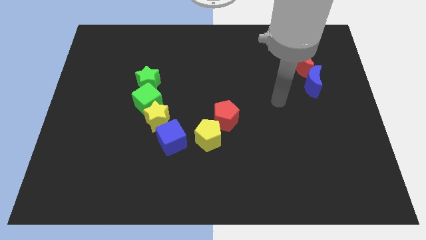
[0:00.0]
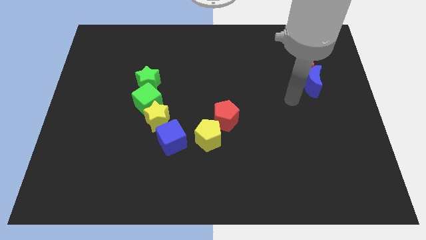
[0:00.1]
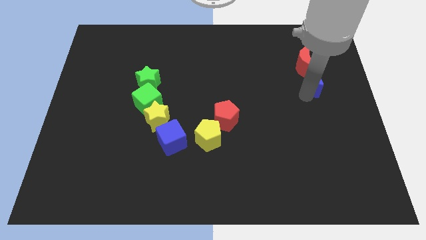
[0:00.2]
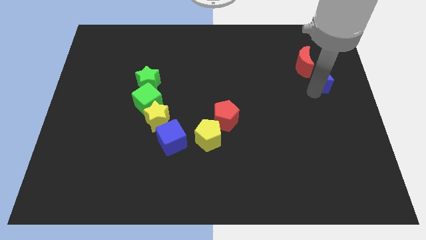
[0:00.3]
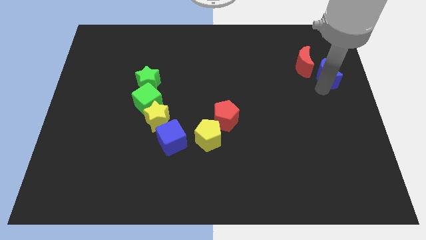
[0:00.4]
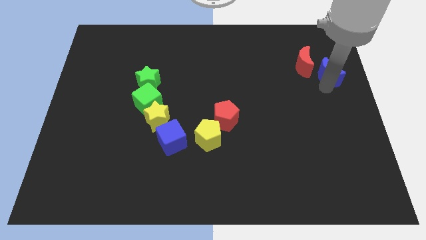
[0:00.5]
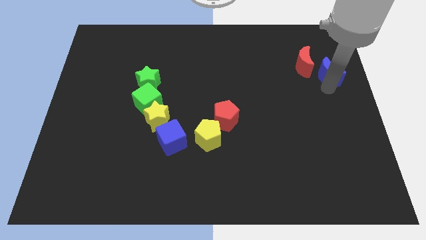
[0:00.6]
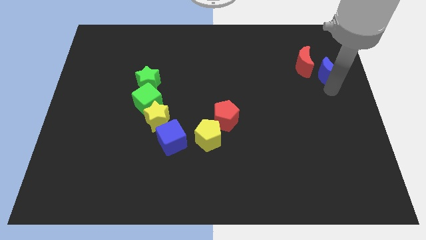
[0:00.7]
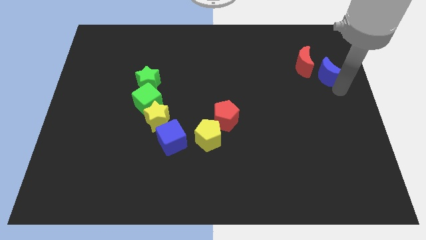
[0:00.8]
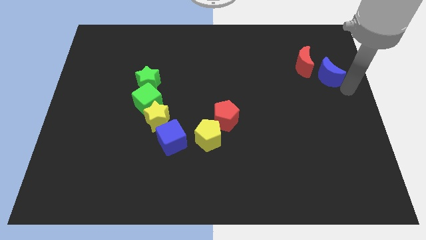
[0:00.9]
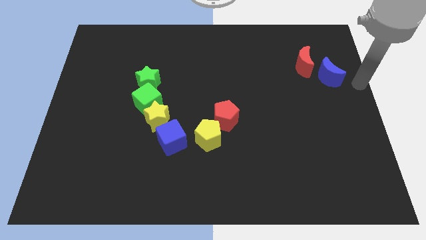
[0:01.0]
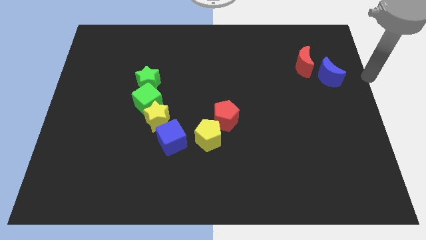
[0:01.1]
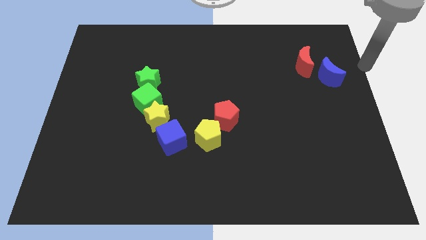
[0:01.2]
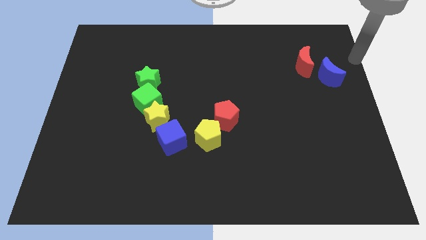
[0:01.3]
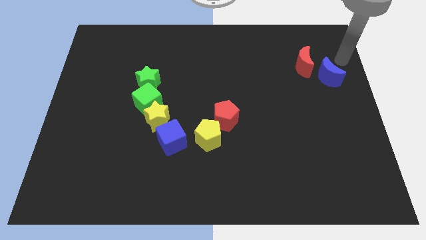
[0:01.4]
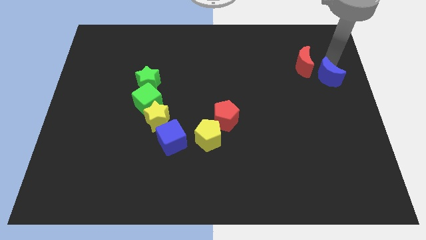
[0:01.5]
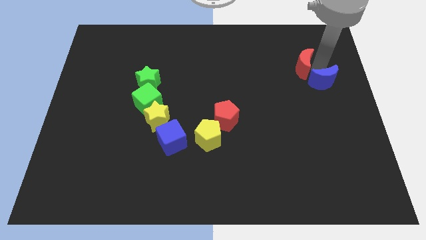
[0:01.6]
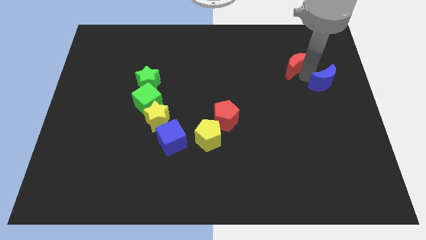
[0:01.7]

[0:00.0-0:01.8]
slightly move the blue moon towards the right of the red crescent

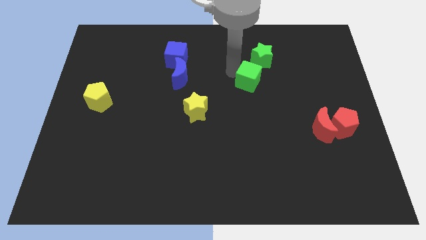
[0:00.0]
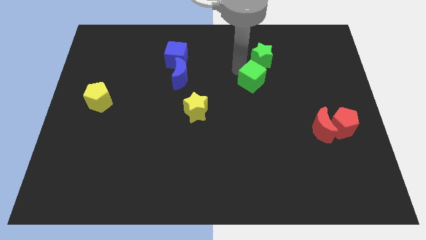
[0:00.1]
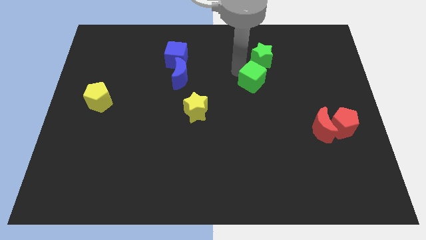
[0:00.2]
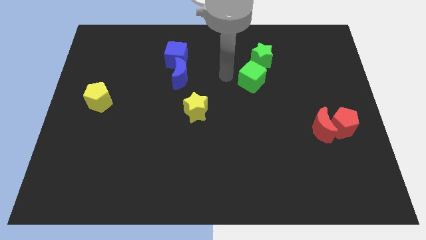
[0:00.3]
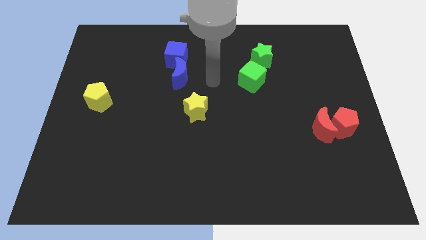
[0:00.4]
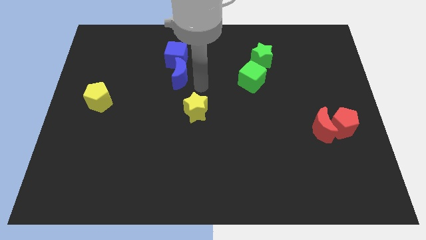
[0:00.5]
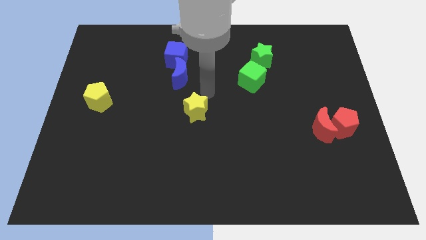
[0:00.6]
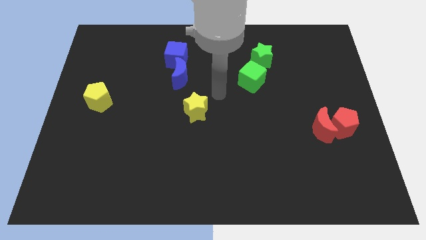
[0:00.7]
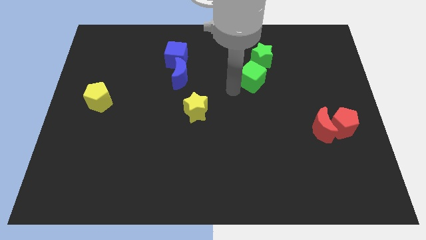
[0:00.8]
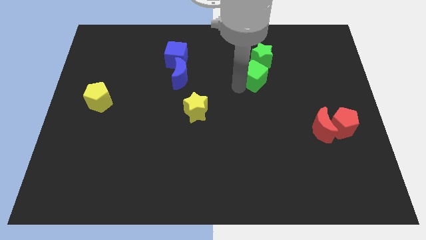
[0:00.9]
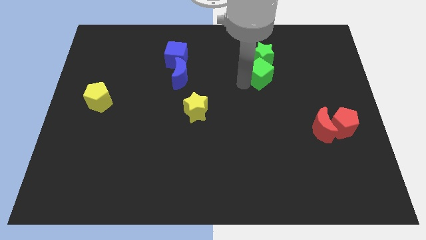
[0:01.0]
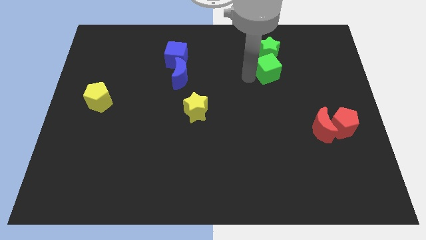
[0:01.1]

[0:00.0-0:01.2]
place green cube below green star

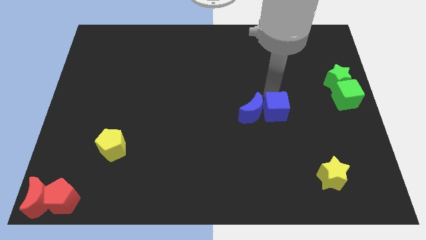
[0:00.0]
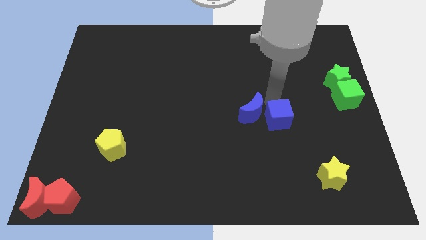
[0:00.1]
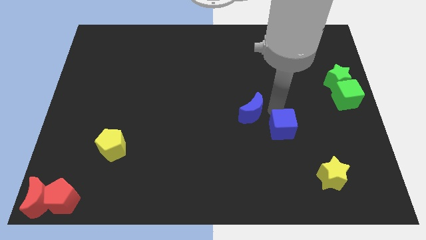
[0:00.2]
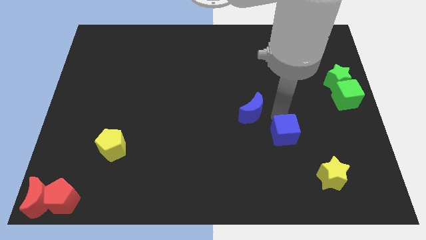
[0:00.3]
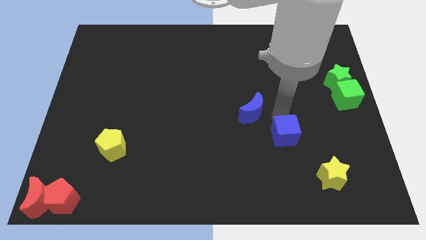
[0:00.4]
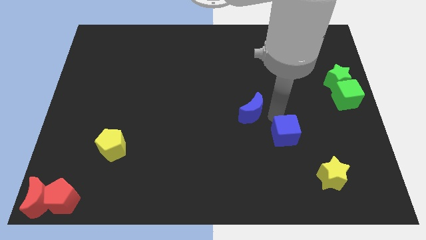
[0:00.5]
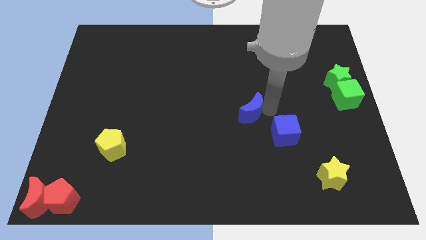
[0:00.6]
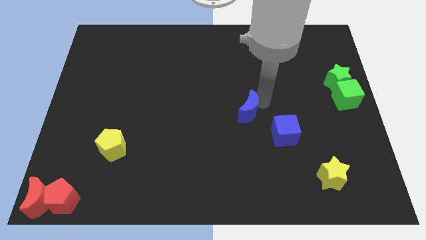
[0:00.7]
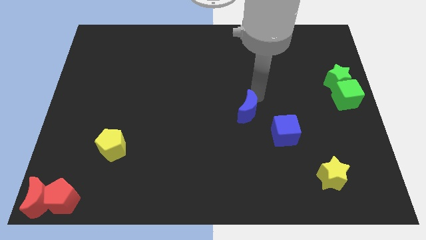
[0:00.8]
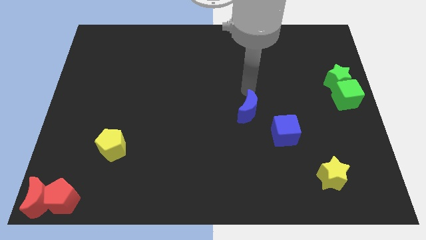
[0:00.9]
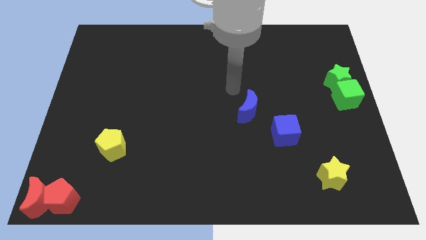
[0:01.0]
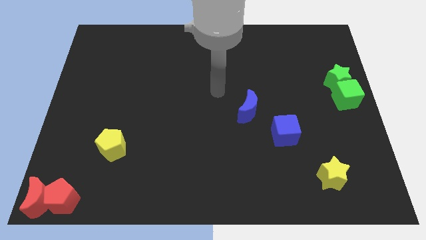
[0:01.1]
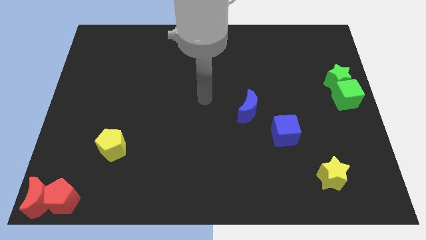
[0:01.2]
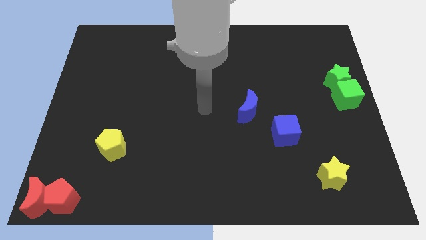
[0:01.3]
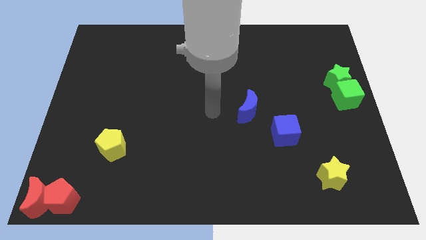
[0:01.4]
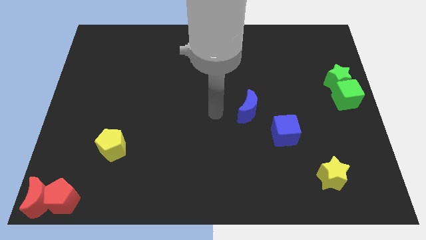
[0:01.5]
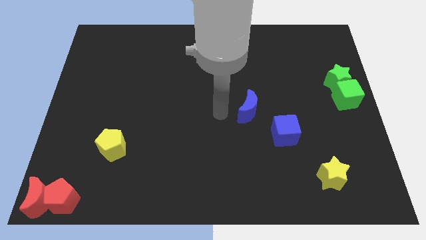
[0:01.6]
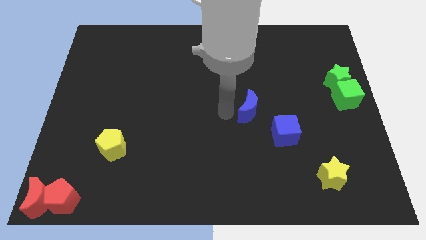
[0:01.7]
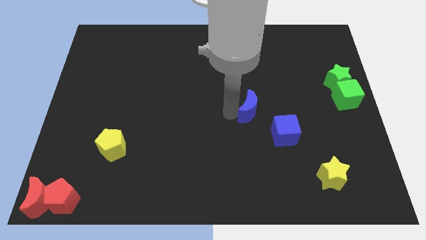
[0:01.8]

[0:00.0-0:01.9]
move the blue cube away from blue moon

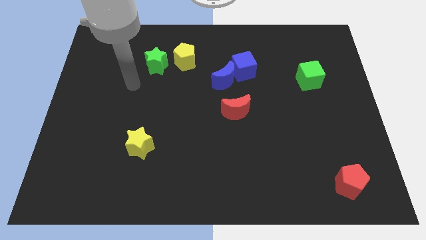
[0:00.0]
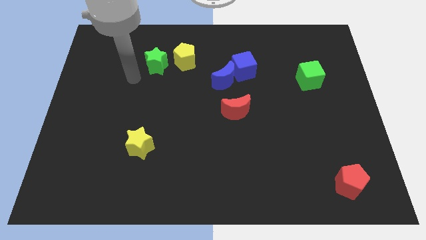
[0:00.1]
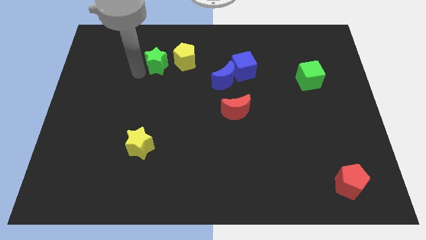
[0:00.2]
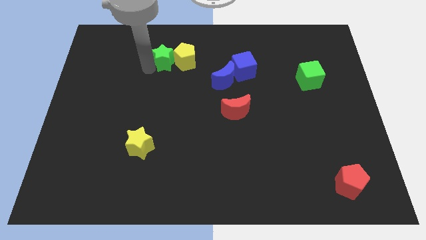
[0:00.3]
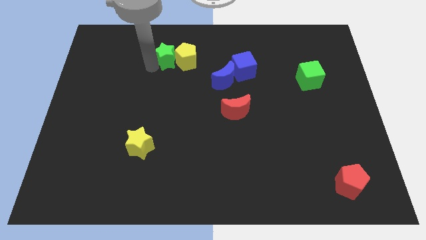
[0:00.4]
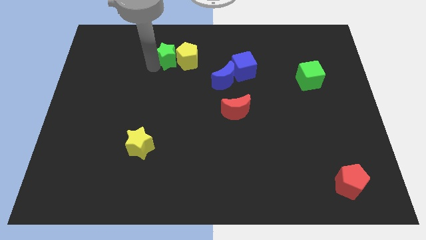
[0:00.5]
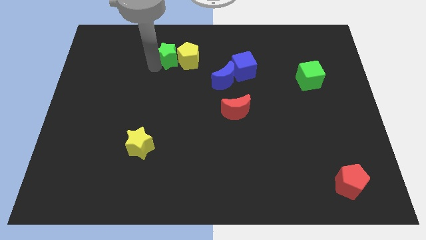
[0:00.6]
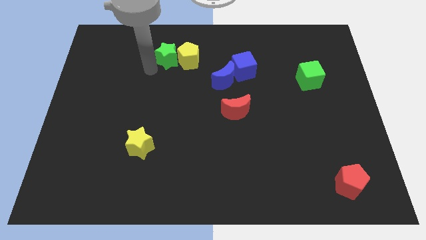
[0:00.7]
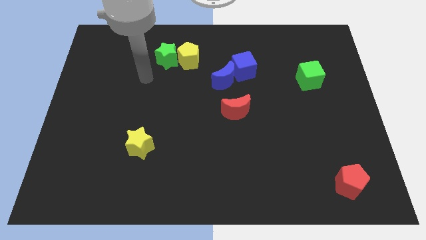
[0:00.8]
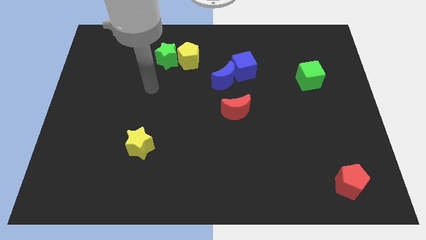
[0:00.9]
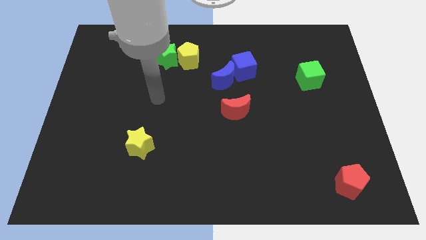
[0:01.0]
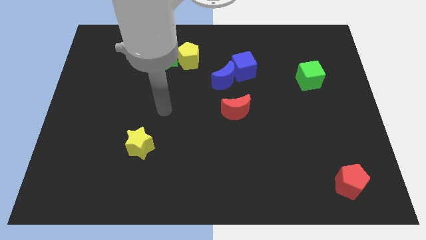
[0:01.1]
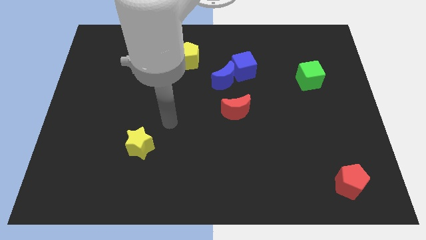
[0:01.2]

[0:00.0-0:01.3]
push the green star into the yellow pentagon

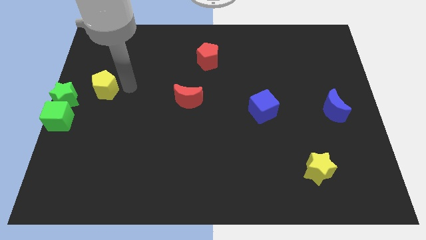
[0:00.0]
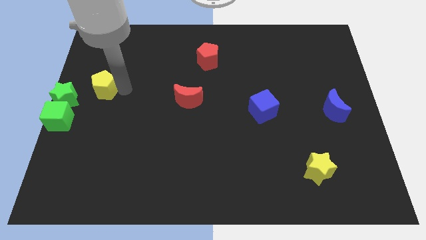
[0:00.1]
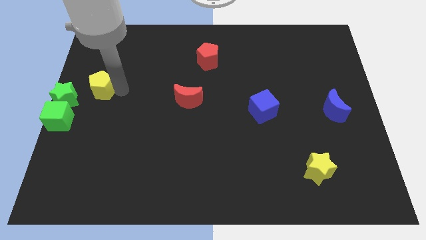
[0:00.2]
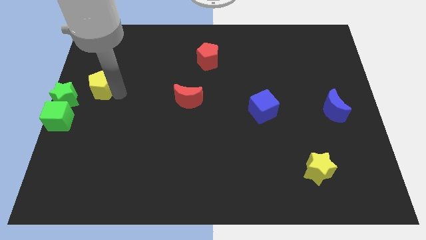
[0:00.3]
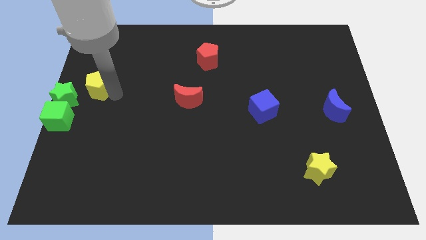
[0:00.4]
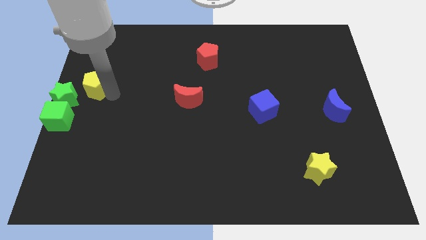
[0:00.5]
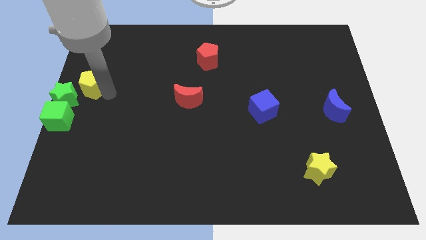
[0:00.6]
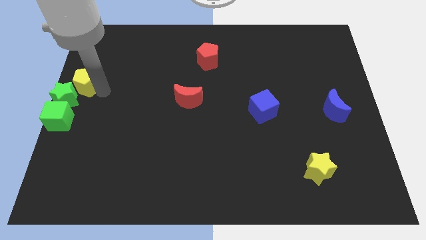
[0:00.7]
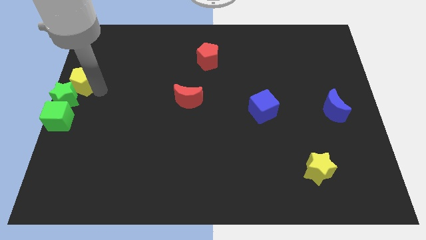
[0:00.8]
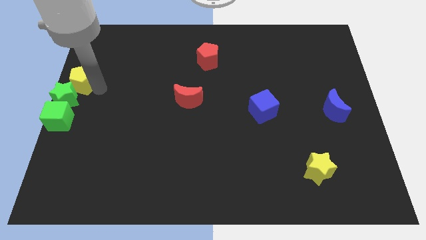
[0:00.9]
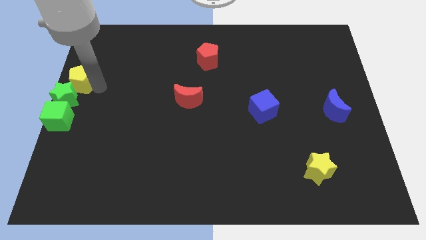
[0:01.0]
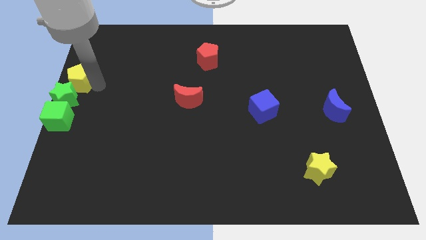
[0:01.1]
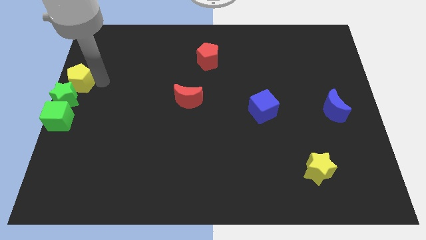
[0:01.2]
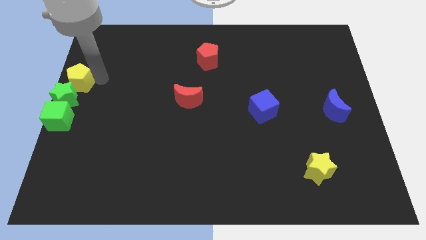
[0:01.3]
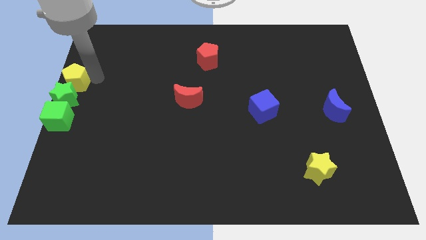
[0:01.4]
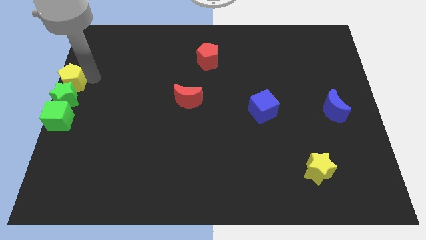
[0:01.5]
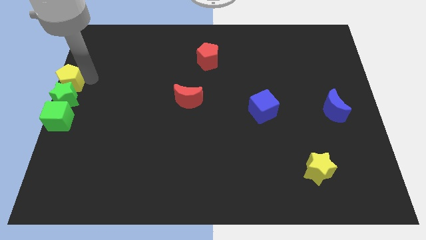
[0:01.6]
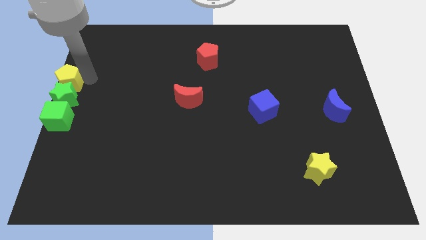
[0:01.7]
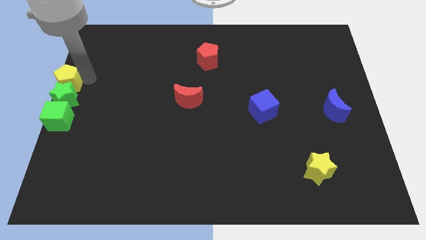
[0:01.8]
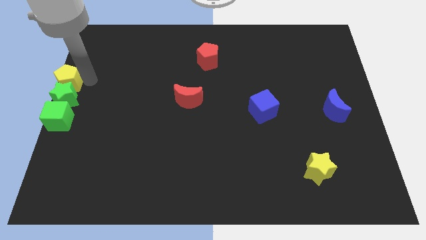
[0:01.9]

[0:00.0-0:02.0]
place the yellow pentagon at the top of green star

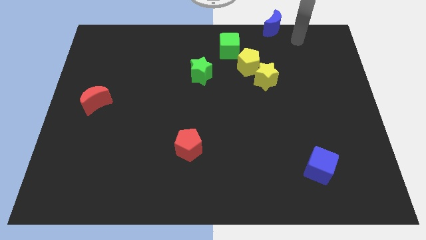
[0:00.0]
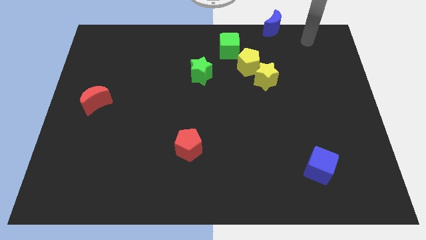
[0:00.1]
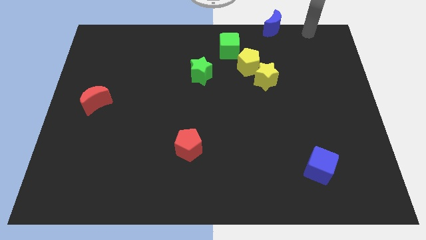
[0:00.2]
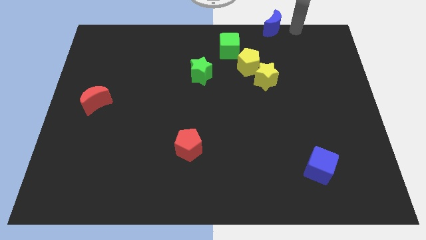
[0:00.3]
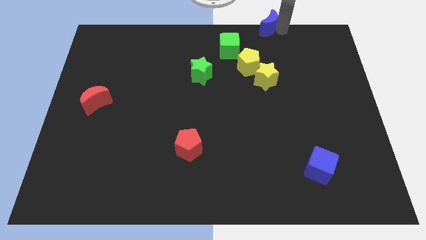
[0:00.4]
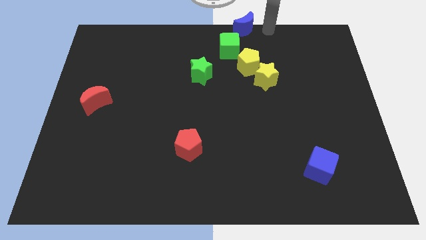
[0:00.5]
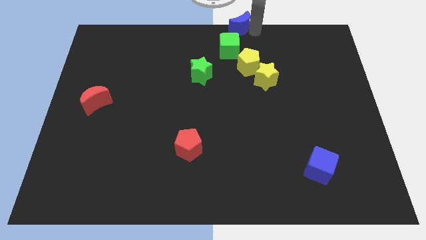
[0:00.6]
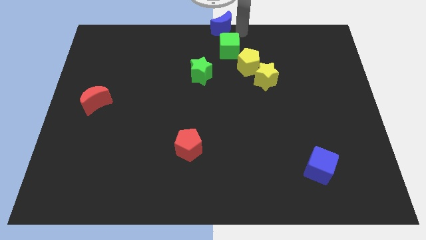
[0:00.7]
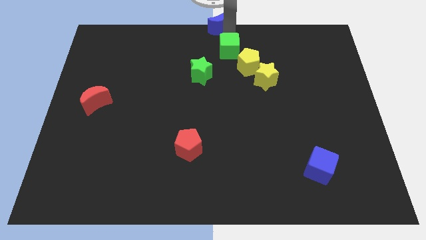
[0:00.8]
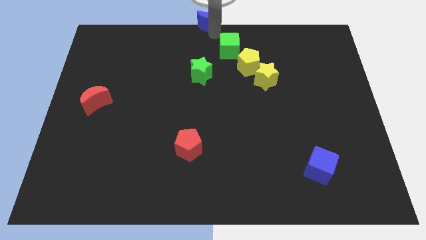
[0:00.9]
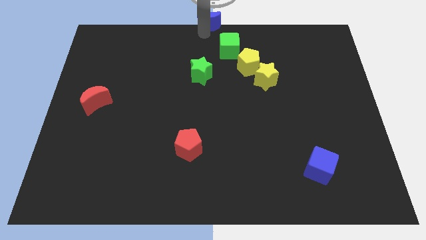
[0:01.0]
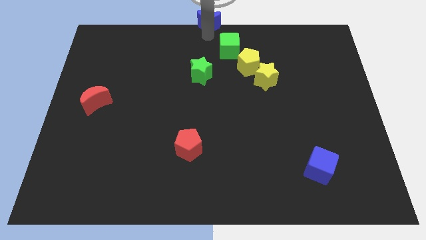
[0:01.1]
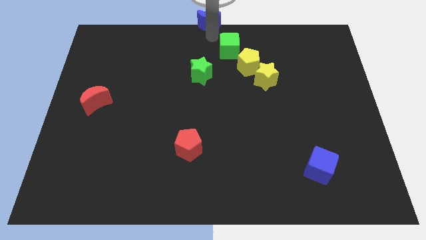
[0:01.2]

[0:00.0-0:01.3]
place blue moon vertically above the green star
